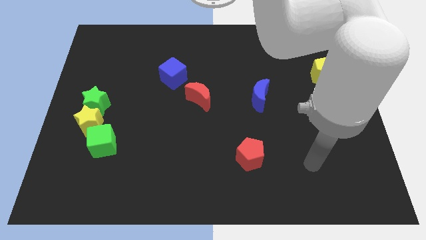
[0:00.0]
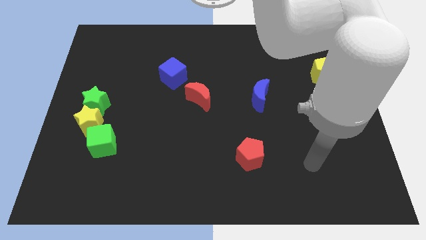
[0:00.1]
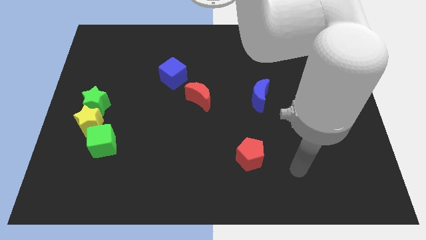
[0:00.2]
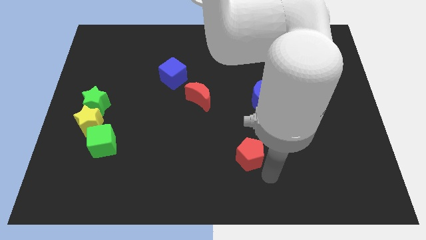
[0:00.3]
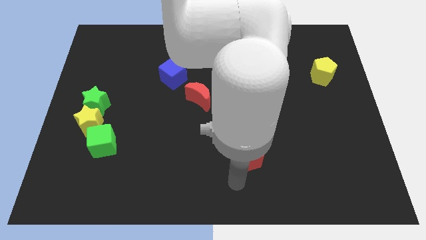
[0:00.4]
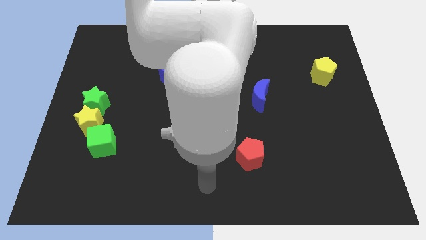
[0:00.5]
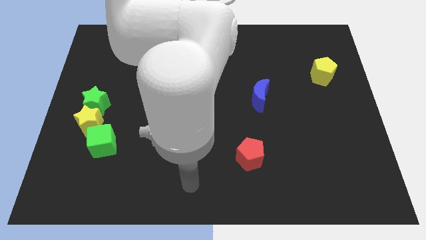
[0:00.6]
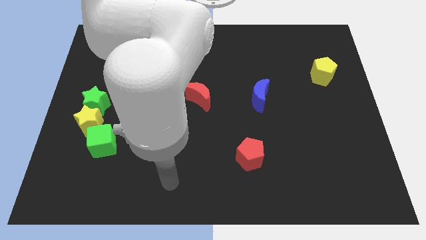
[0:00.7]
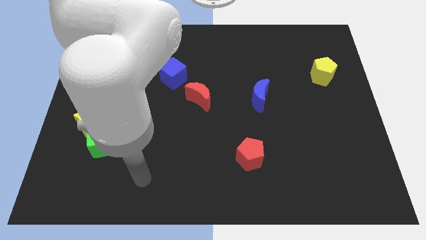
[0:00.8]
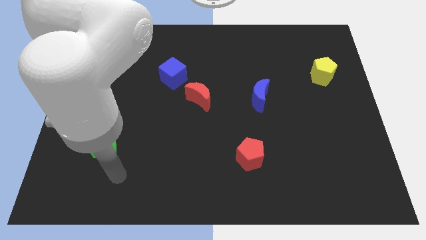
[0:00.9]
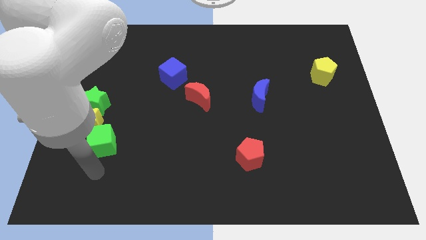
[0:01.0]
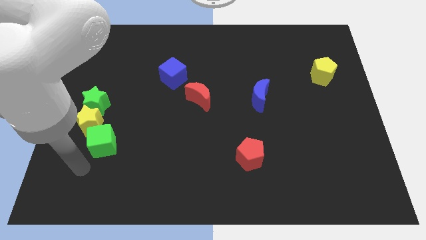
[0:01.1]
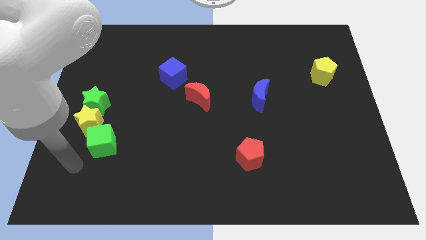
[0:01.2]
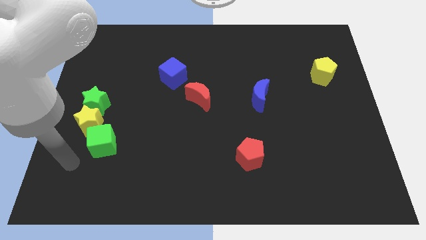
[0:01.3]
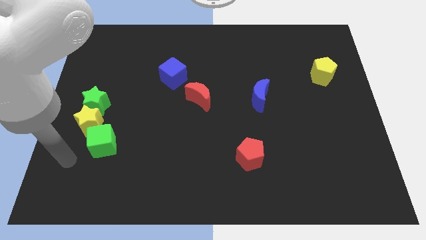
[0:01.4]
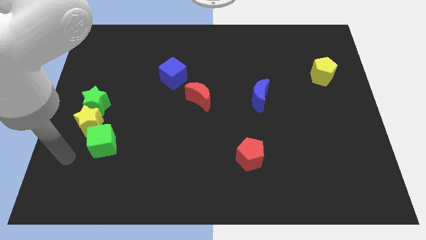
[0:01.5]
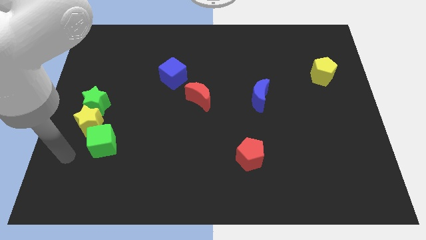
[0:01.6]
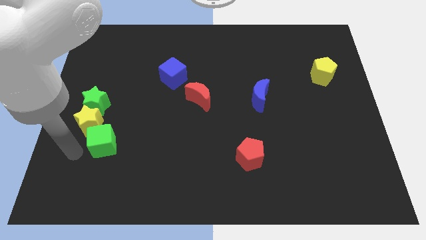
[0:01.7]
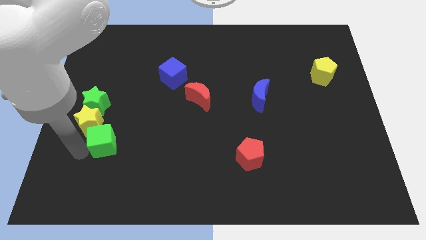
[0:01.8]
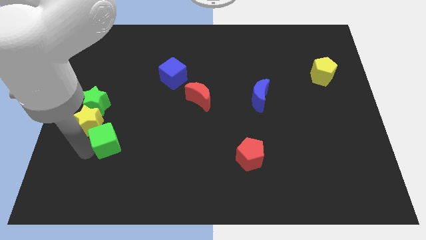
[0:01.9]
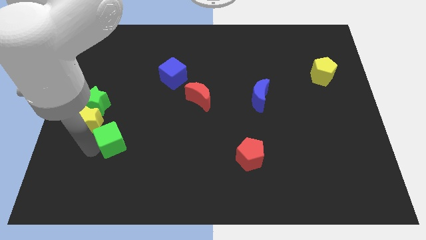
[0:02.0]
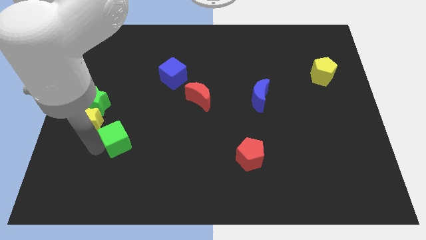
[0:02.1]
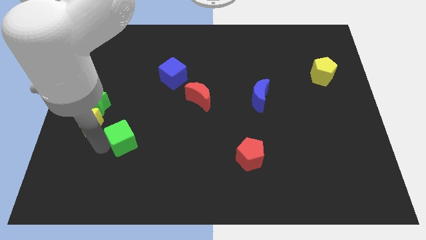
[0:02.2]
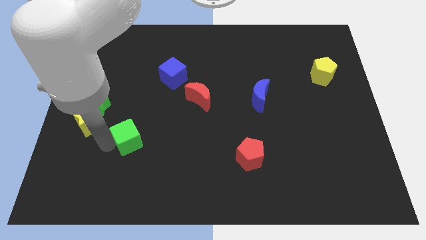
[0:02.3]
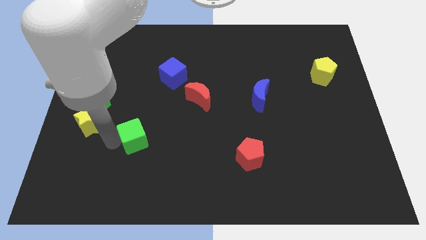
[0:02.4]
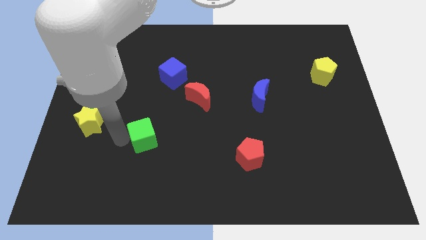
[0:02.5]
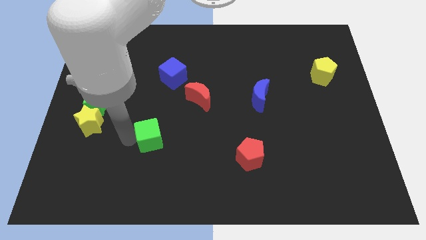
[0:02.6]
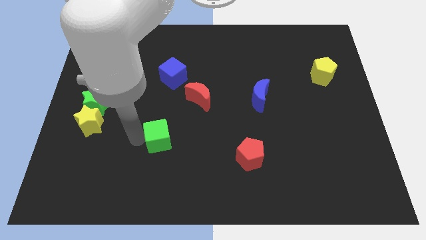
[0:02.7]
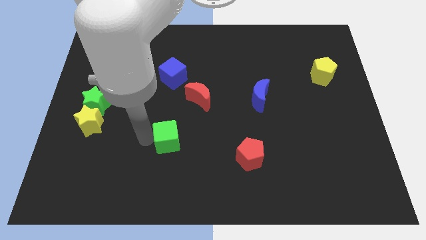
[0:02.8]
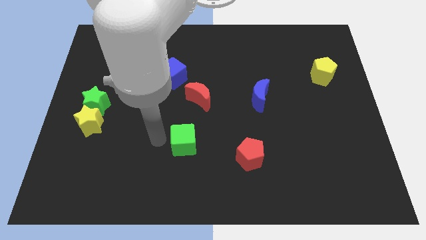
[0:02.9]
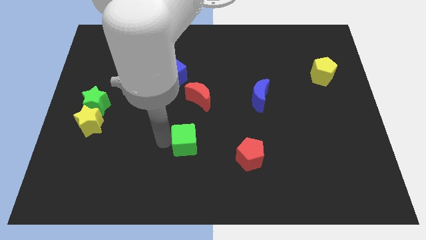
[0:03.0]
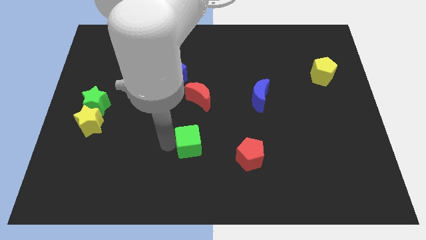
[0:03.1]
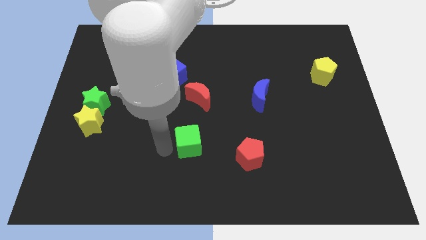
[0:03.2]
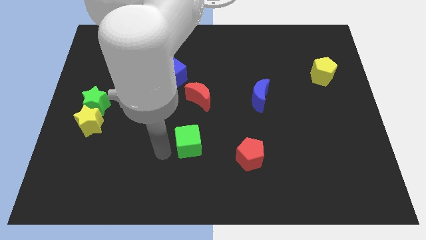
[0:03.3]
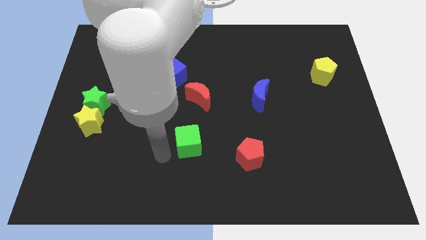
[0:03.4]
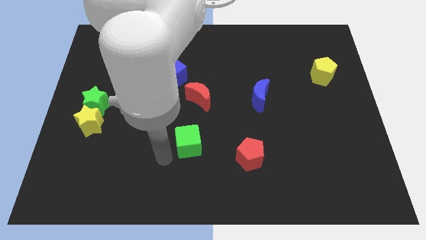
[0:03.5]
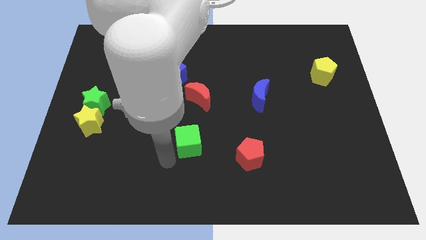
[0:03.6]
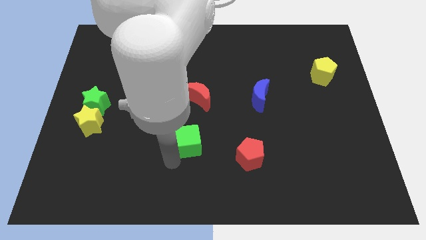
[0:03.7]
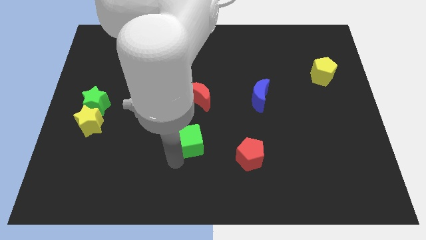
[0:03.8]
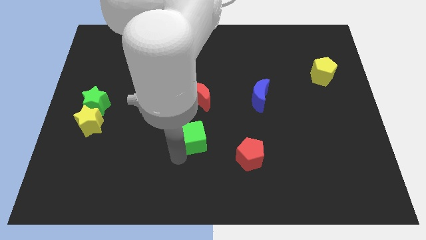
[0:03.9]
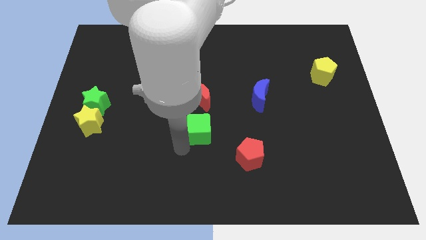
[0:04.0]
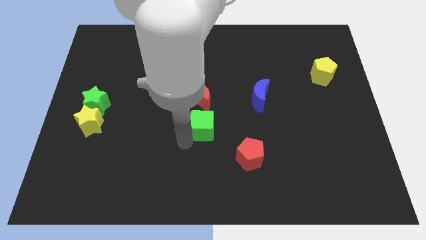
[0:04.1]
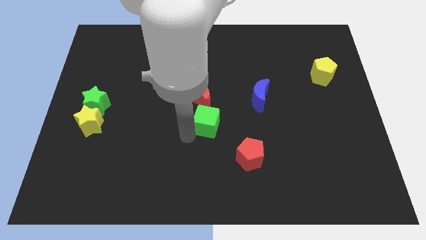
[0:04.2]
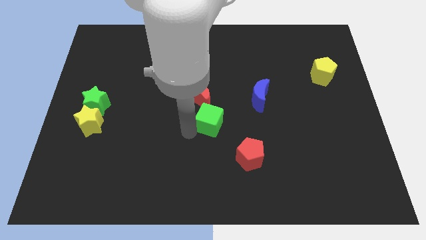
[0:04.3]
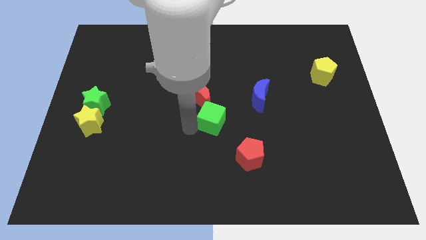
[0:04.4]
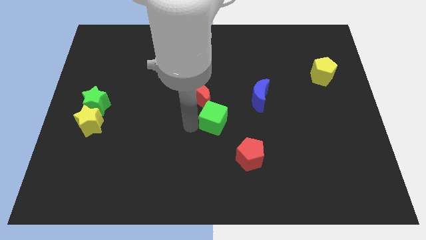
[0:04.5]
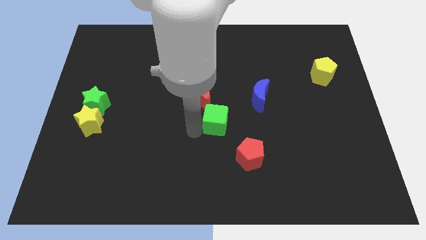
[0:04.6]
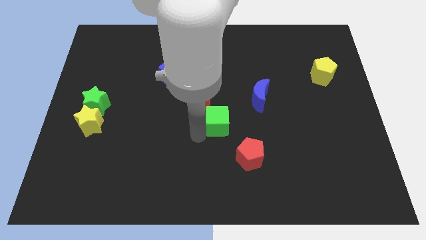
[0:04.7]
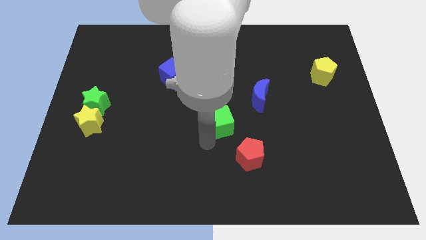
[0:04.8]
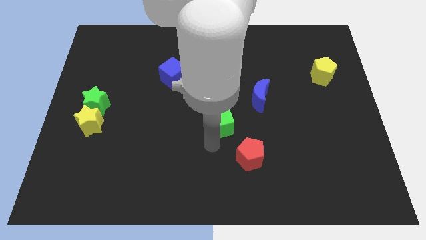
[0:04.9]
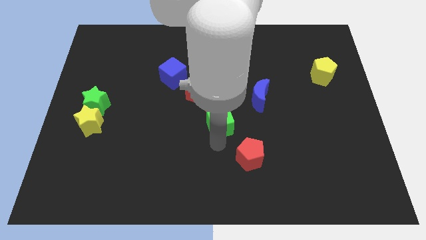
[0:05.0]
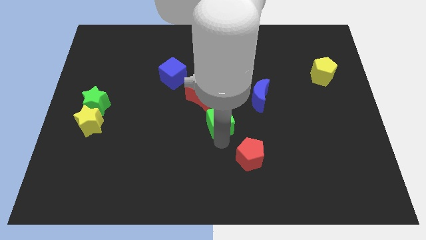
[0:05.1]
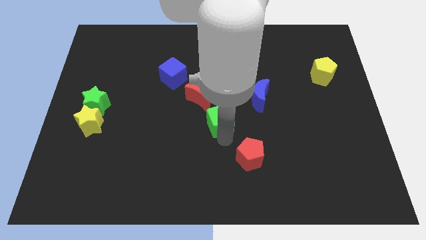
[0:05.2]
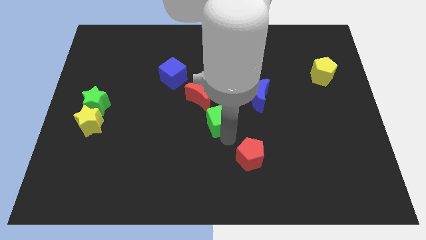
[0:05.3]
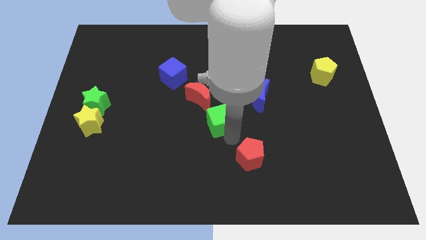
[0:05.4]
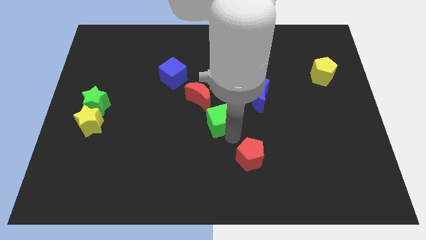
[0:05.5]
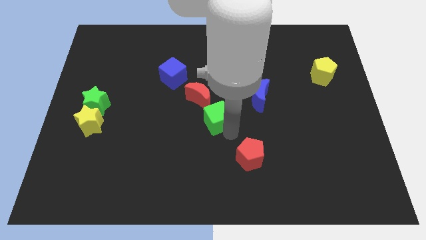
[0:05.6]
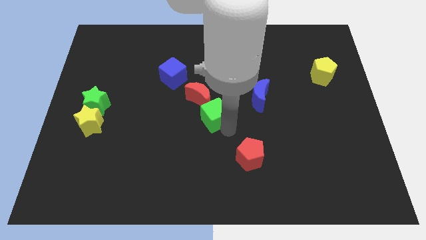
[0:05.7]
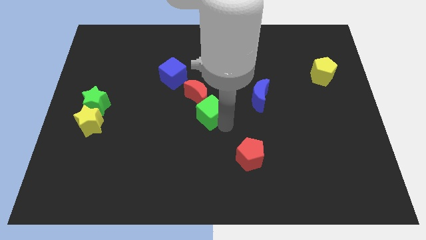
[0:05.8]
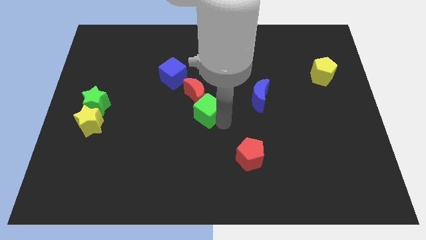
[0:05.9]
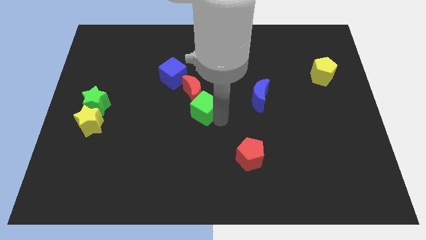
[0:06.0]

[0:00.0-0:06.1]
slide the green cube close to the red moon

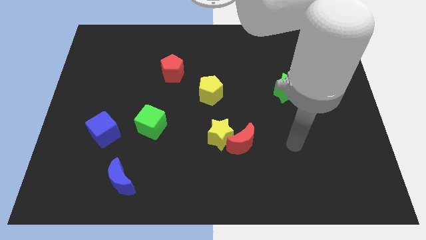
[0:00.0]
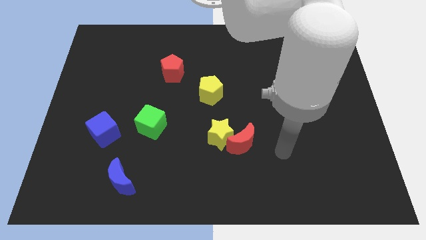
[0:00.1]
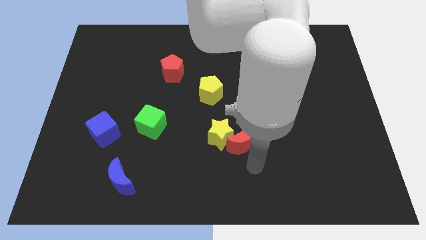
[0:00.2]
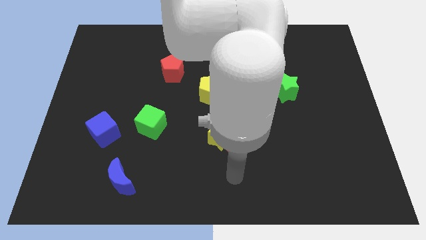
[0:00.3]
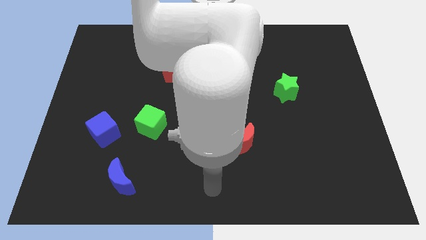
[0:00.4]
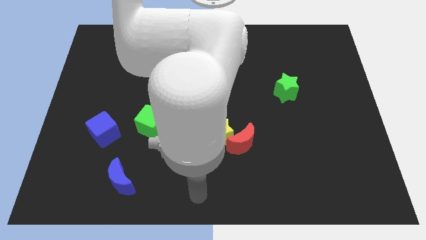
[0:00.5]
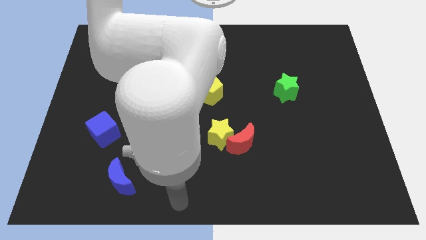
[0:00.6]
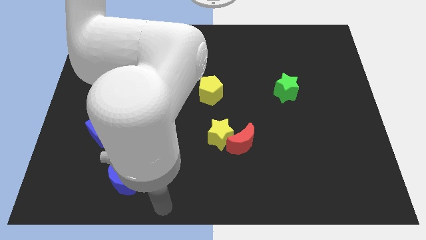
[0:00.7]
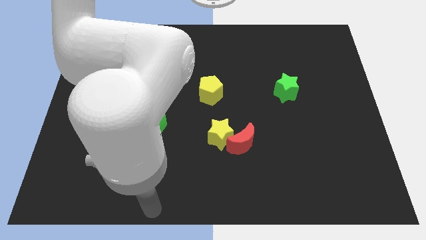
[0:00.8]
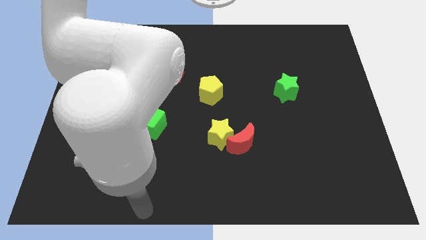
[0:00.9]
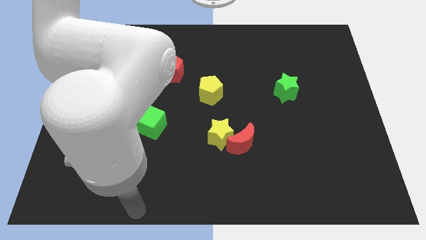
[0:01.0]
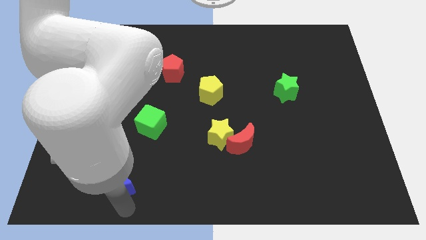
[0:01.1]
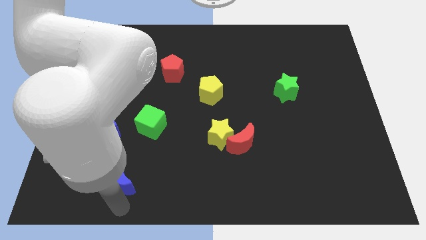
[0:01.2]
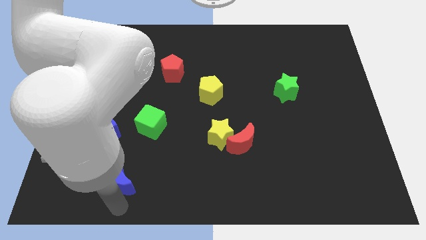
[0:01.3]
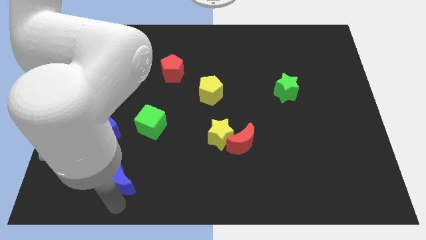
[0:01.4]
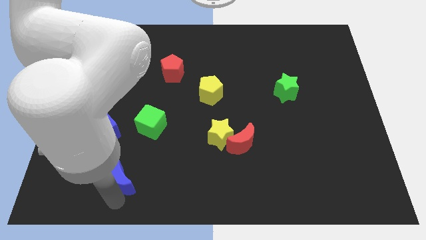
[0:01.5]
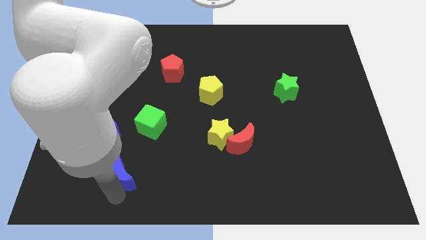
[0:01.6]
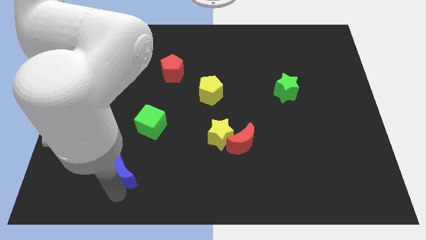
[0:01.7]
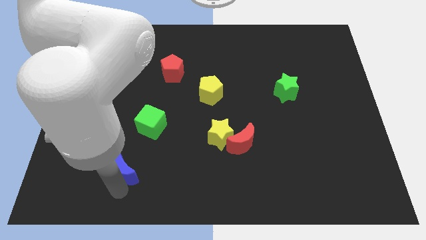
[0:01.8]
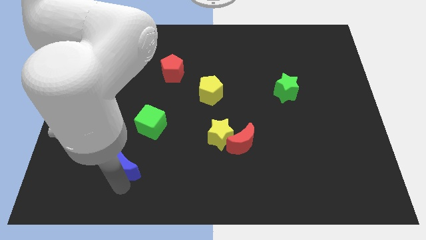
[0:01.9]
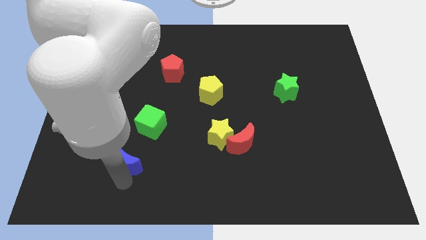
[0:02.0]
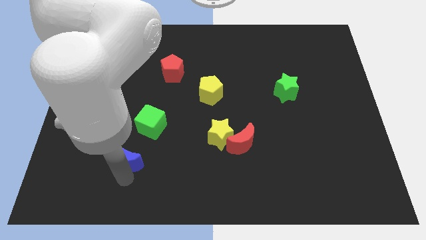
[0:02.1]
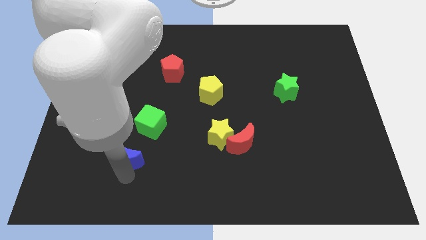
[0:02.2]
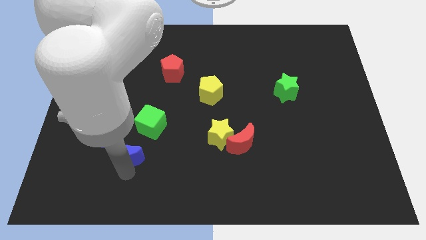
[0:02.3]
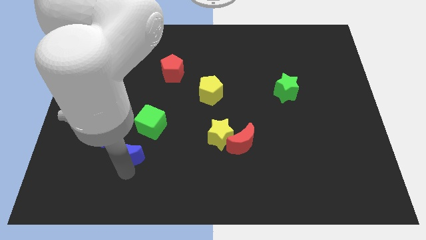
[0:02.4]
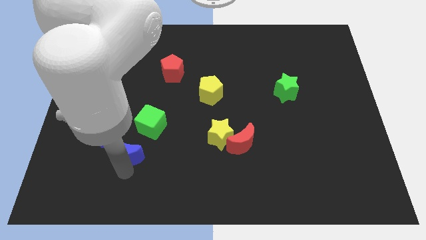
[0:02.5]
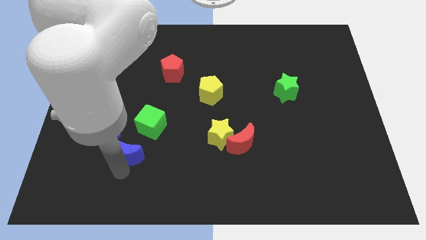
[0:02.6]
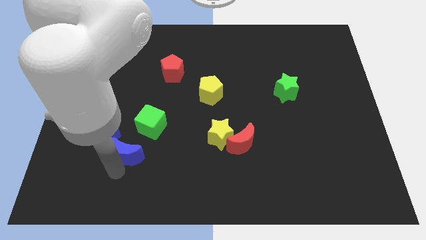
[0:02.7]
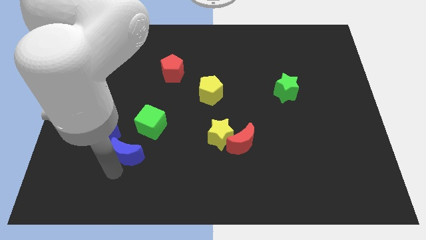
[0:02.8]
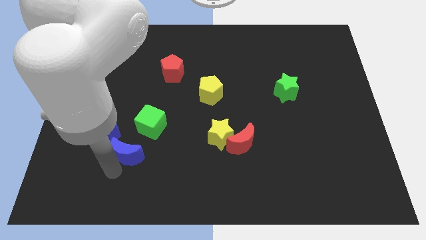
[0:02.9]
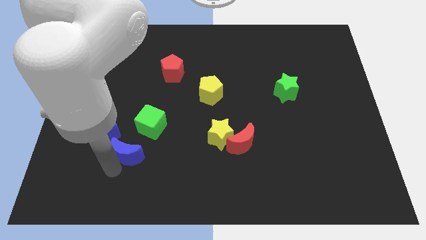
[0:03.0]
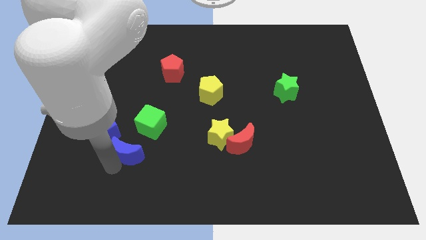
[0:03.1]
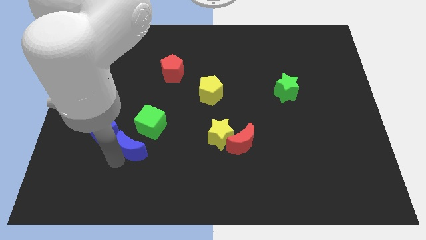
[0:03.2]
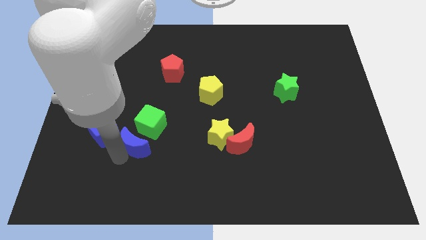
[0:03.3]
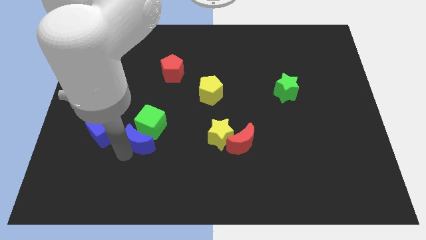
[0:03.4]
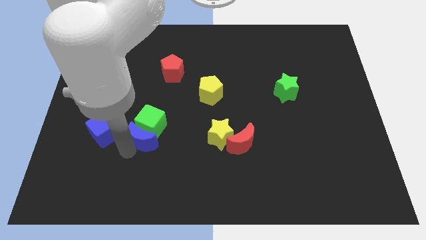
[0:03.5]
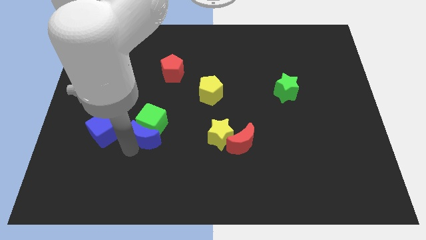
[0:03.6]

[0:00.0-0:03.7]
push the blue moon towards the green cube
